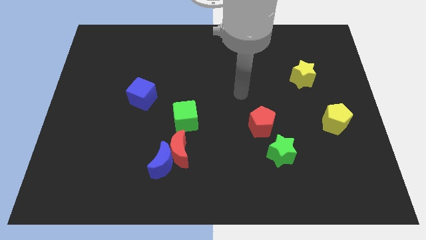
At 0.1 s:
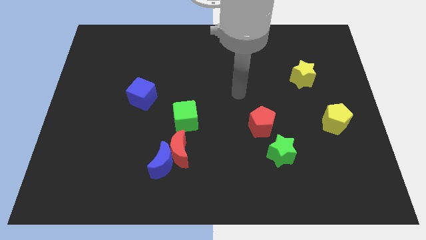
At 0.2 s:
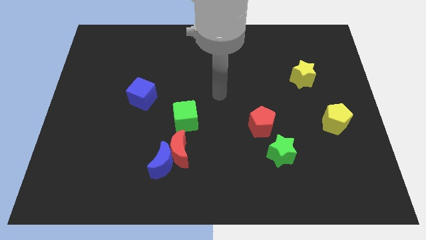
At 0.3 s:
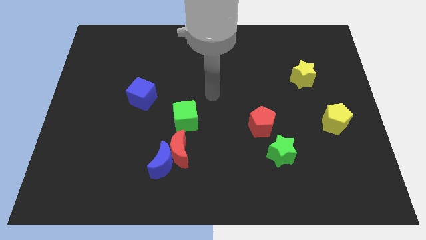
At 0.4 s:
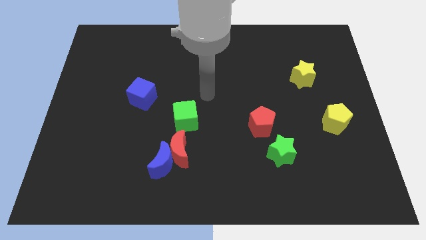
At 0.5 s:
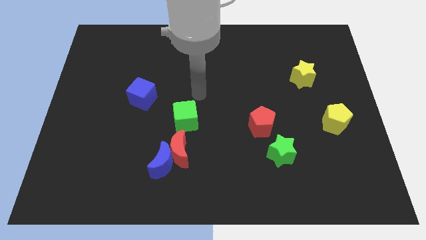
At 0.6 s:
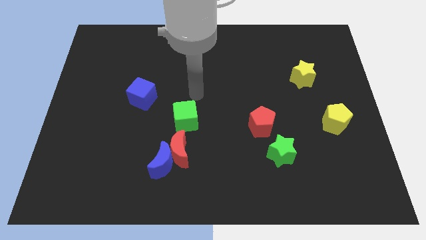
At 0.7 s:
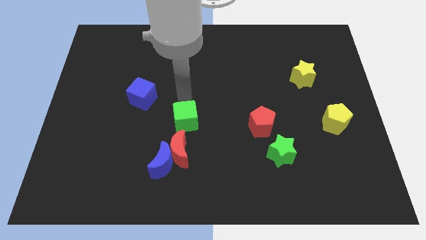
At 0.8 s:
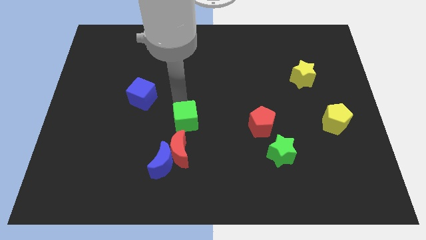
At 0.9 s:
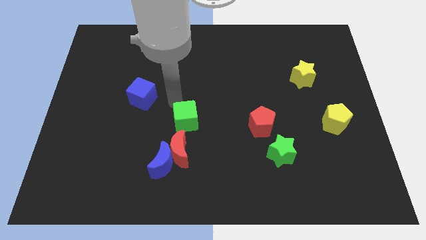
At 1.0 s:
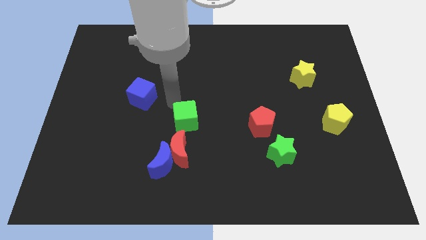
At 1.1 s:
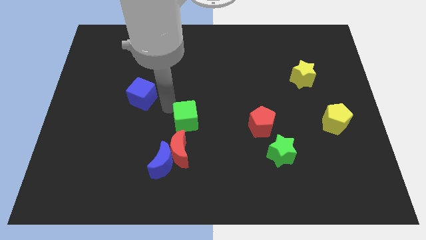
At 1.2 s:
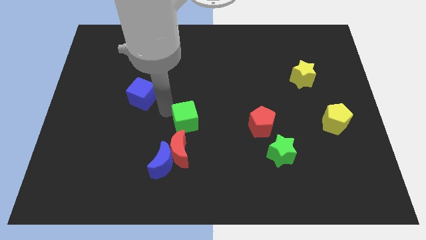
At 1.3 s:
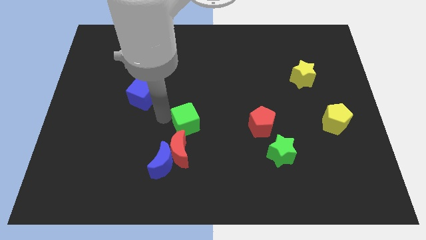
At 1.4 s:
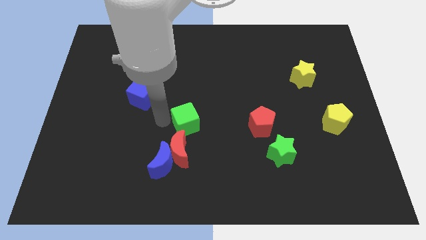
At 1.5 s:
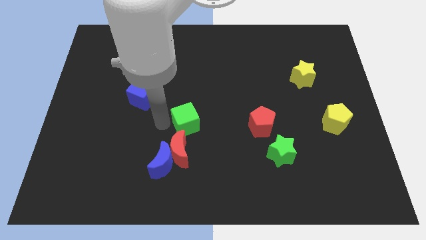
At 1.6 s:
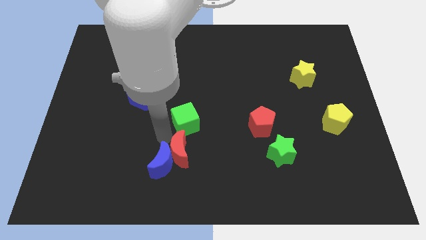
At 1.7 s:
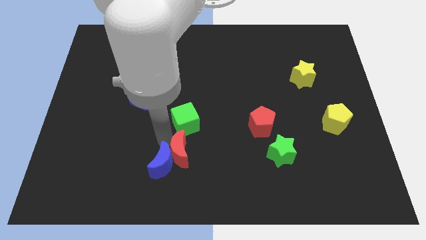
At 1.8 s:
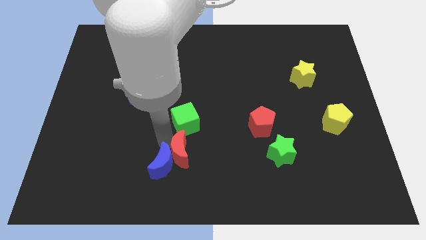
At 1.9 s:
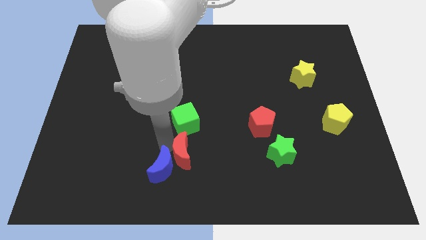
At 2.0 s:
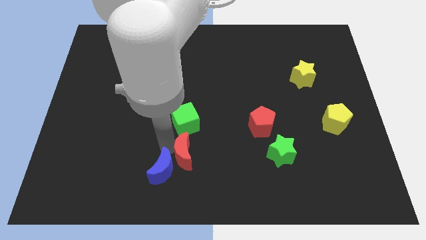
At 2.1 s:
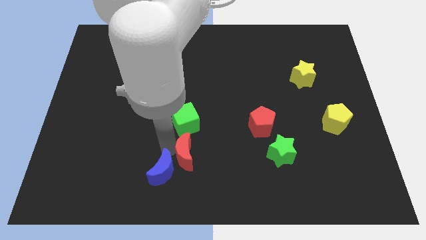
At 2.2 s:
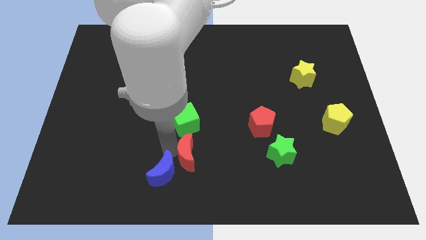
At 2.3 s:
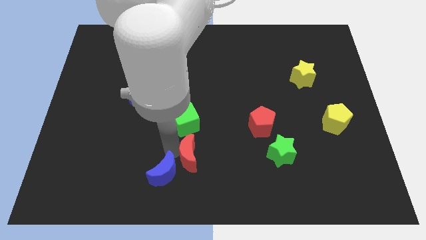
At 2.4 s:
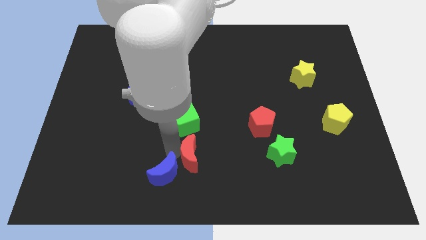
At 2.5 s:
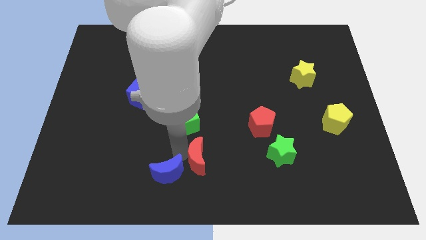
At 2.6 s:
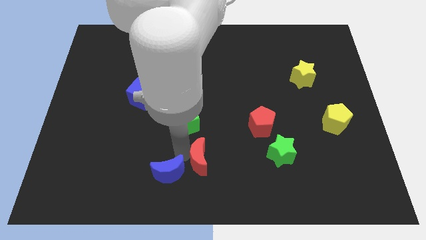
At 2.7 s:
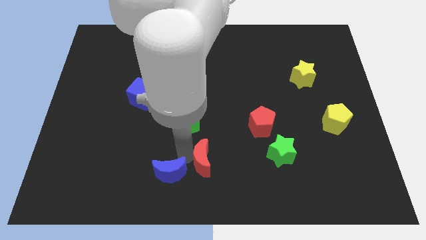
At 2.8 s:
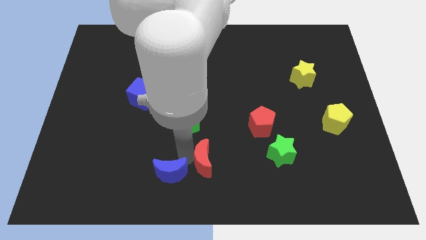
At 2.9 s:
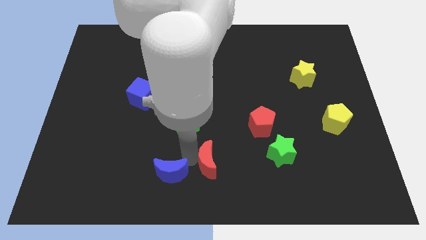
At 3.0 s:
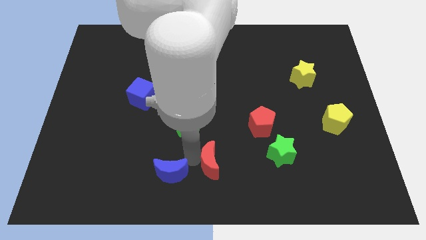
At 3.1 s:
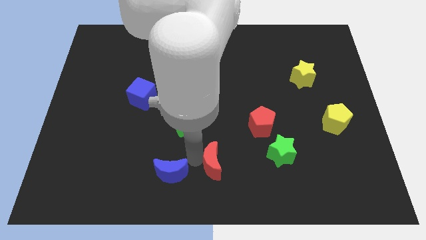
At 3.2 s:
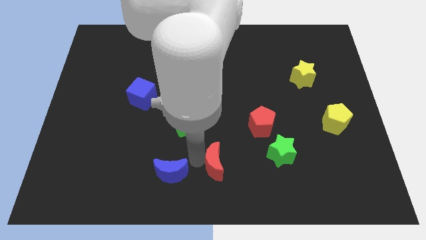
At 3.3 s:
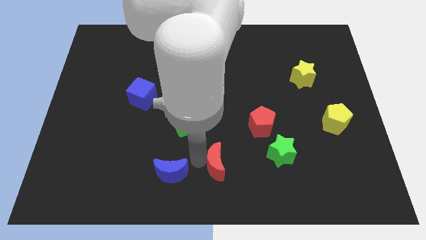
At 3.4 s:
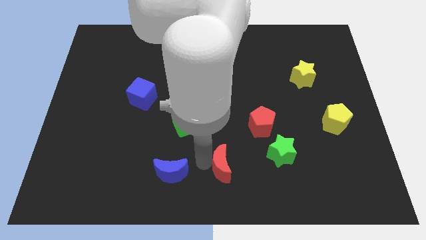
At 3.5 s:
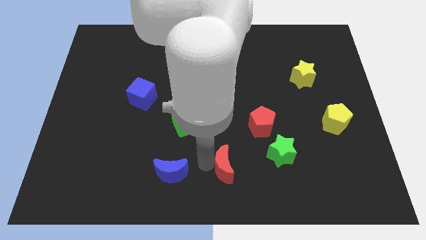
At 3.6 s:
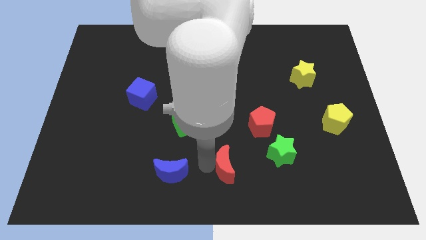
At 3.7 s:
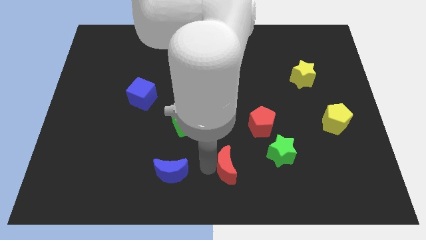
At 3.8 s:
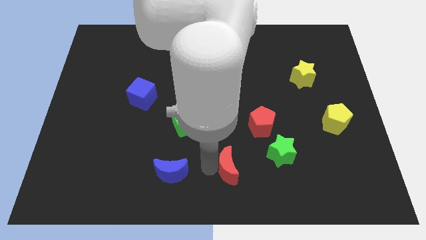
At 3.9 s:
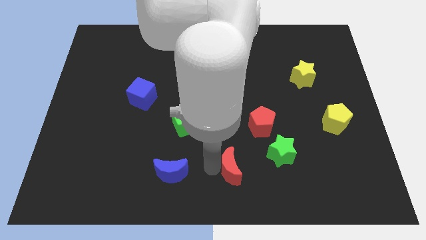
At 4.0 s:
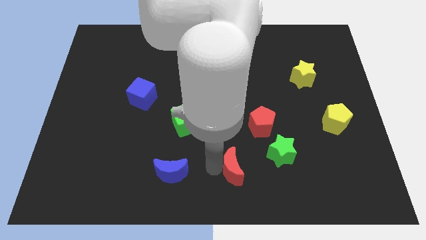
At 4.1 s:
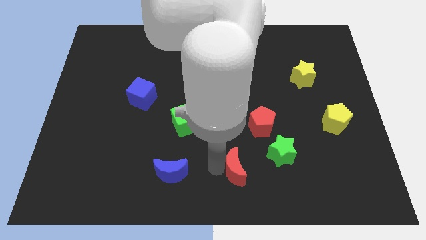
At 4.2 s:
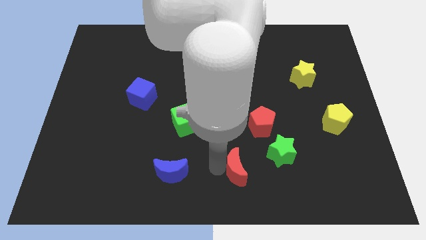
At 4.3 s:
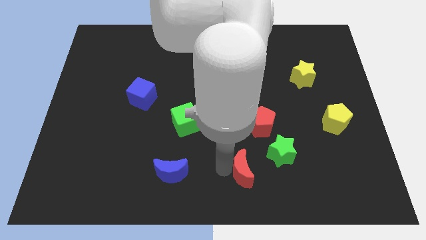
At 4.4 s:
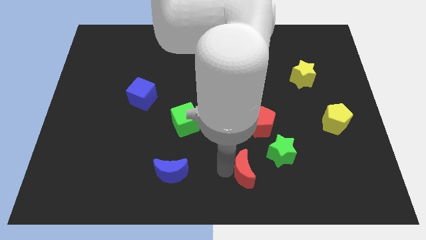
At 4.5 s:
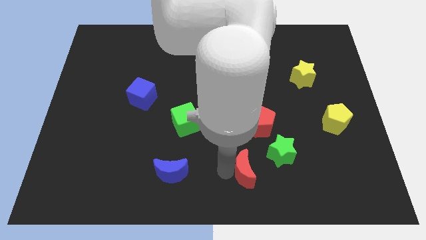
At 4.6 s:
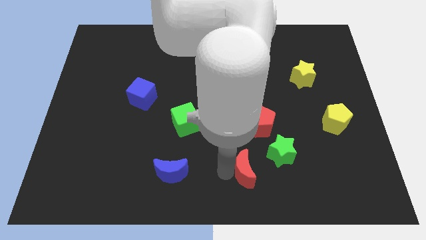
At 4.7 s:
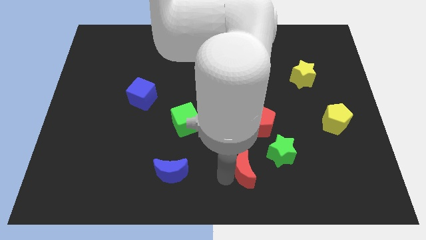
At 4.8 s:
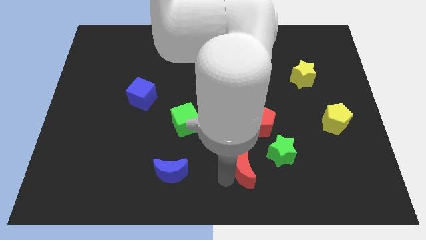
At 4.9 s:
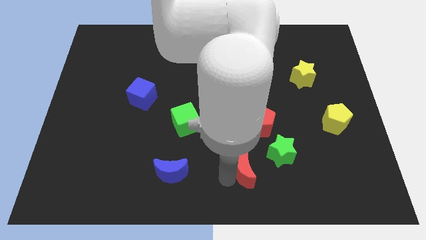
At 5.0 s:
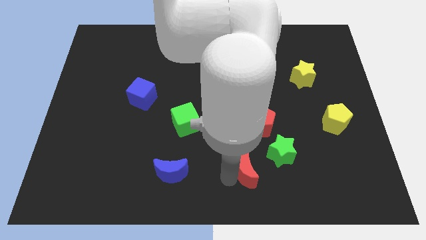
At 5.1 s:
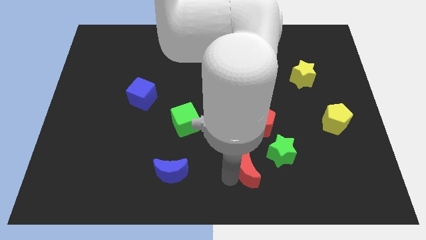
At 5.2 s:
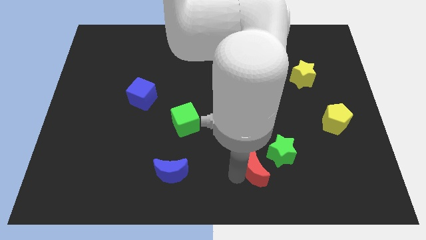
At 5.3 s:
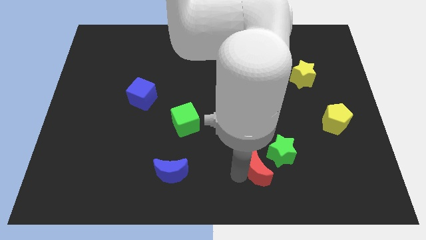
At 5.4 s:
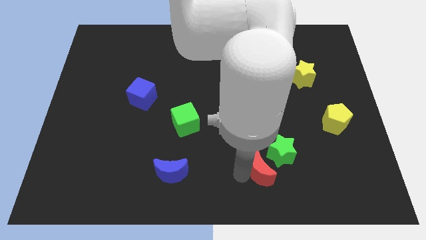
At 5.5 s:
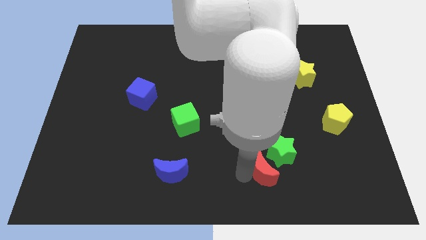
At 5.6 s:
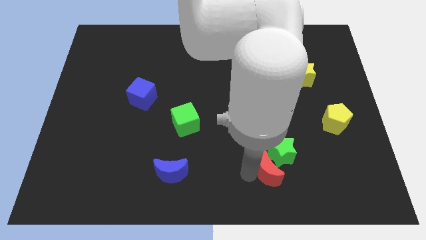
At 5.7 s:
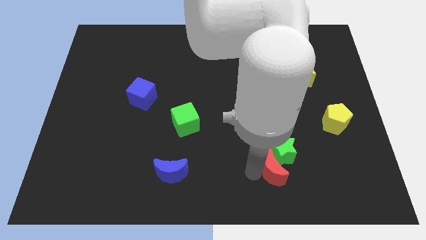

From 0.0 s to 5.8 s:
push the red moon to the green star

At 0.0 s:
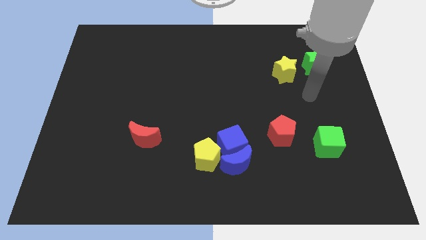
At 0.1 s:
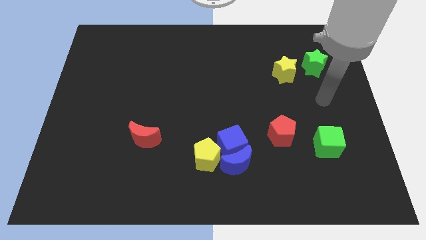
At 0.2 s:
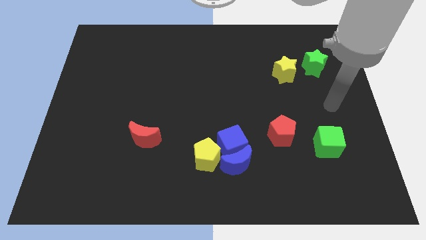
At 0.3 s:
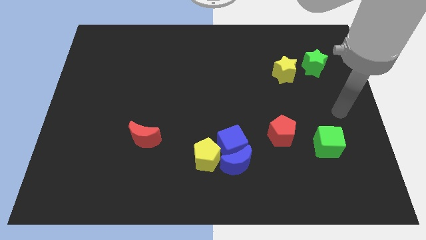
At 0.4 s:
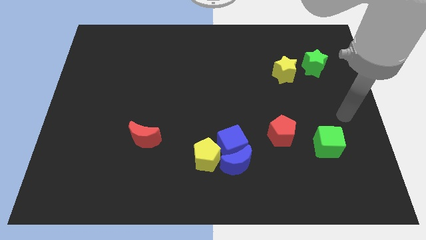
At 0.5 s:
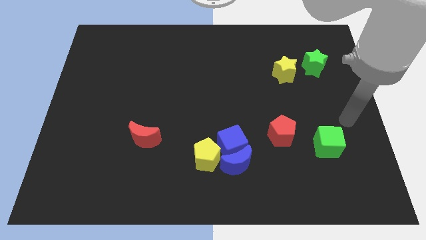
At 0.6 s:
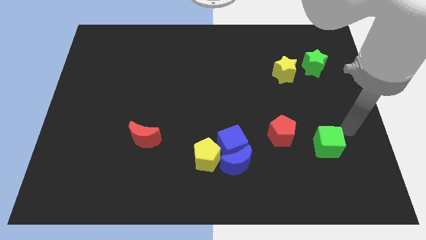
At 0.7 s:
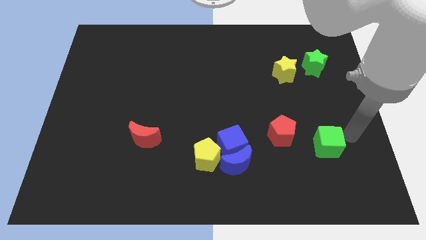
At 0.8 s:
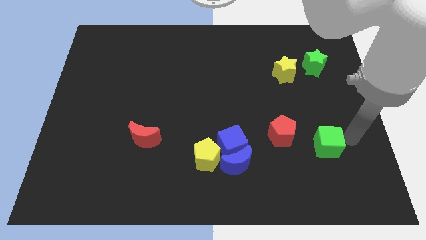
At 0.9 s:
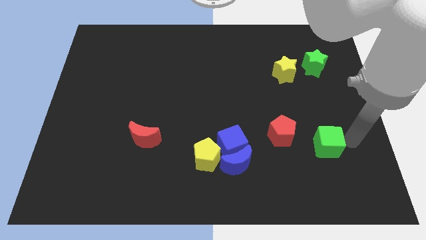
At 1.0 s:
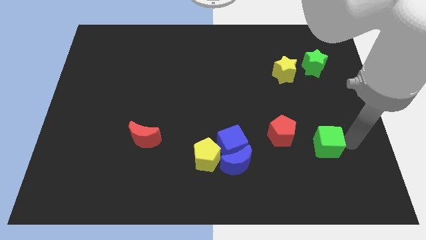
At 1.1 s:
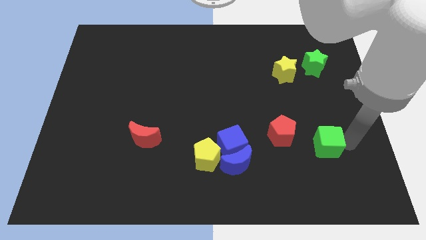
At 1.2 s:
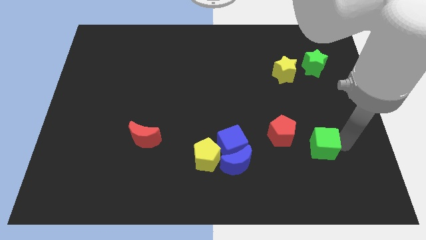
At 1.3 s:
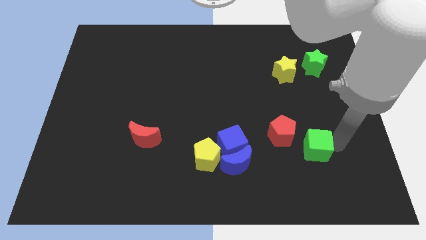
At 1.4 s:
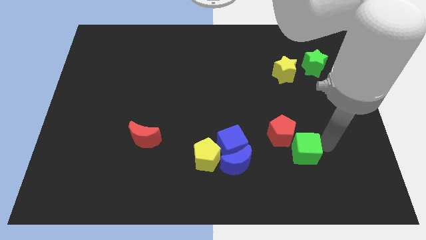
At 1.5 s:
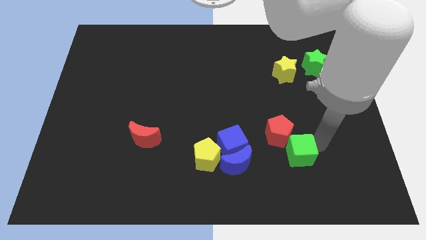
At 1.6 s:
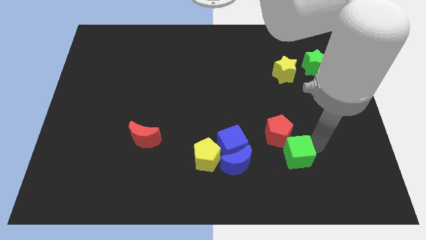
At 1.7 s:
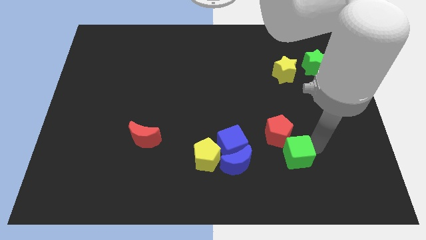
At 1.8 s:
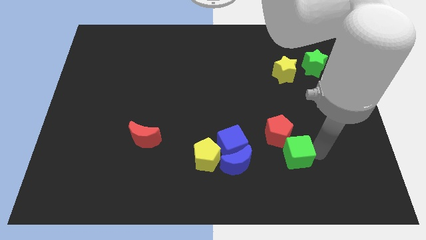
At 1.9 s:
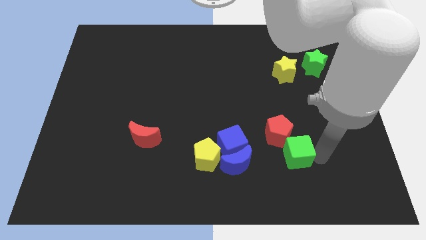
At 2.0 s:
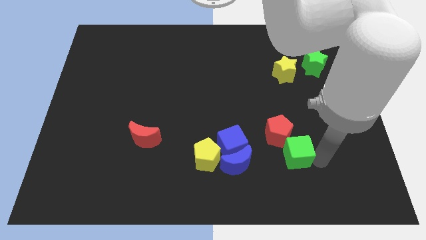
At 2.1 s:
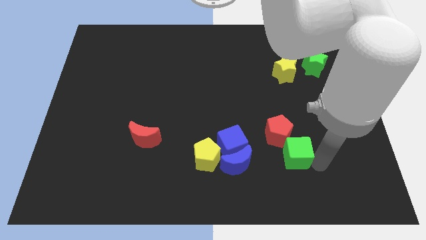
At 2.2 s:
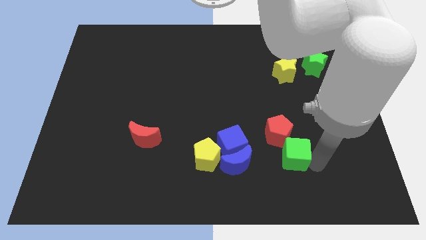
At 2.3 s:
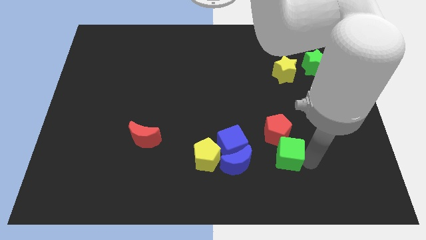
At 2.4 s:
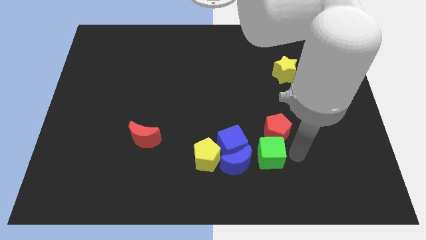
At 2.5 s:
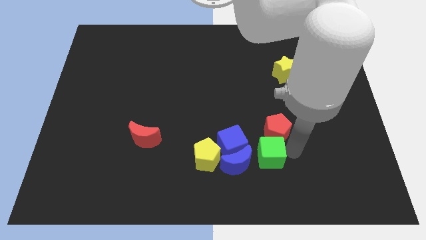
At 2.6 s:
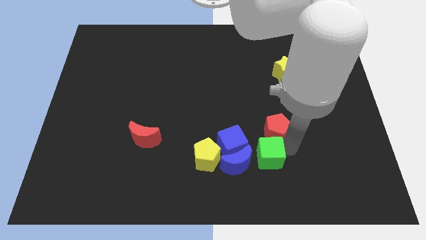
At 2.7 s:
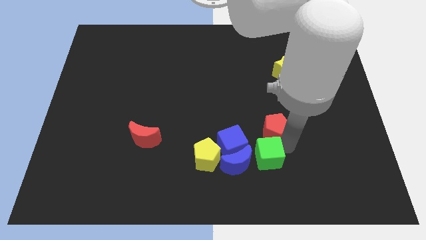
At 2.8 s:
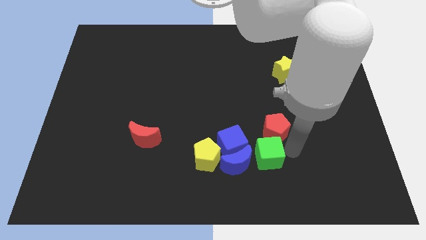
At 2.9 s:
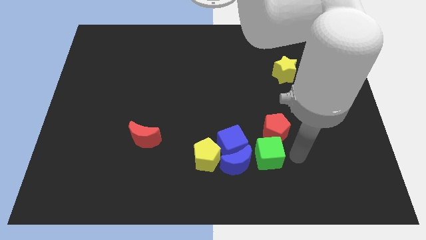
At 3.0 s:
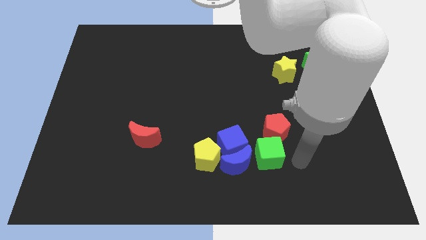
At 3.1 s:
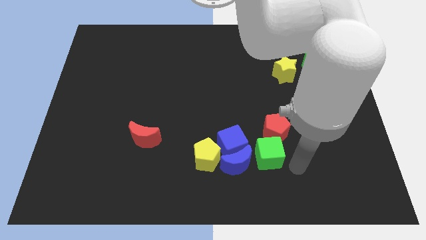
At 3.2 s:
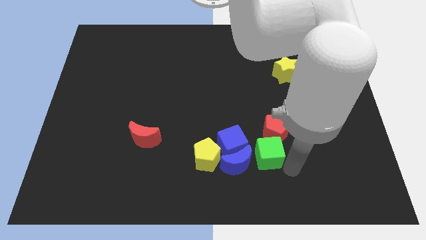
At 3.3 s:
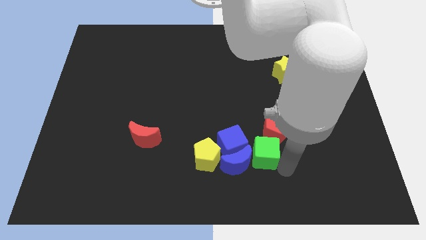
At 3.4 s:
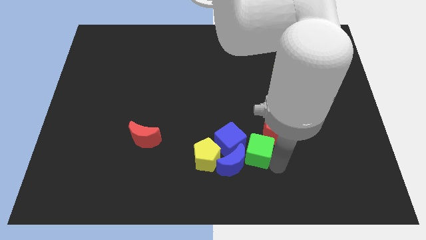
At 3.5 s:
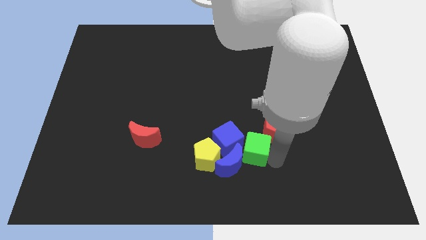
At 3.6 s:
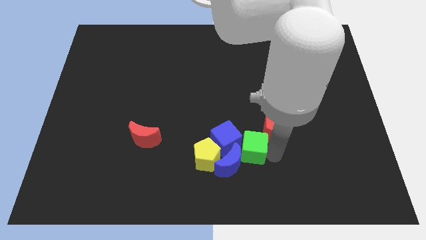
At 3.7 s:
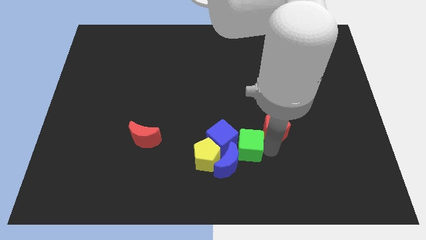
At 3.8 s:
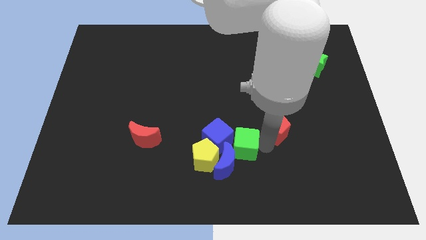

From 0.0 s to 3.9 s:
move the green cube close to the blue cube
